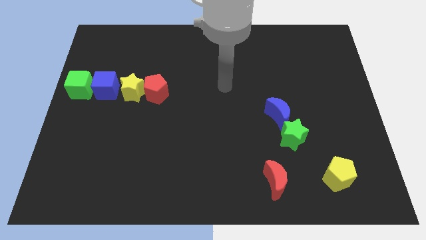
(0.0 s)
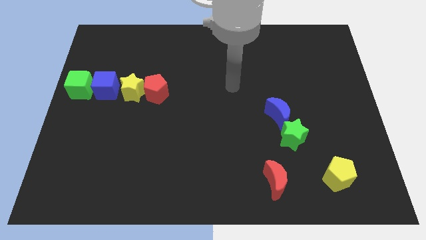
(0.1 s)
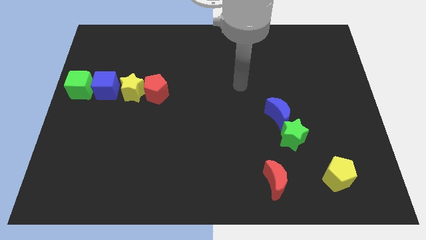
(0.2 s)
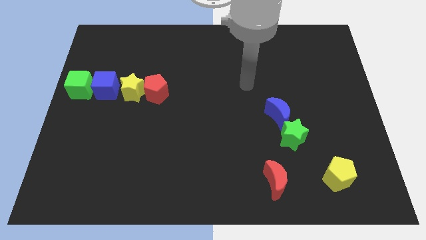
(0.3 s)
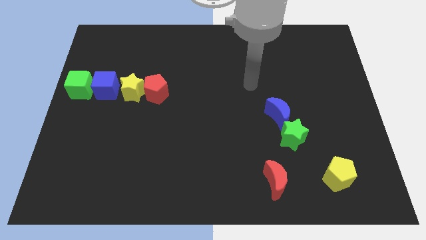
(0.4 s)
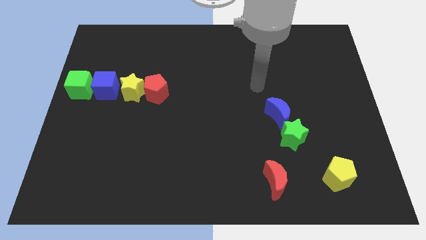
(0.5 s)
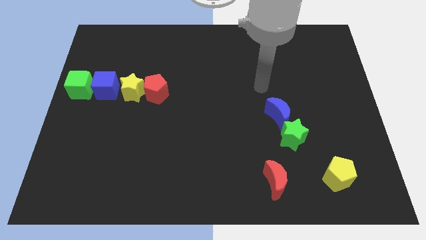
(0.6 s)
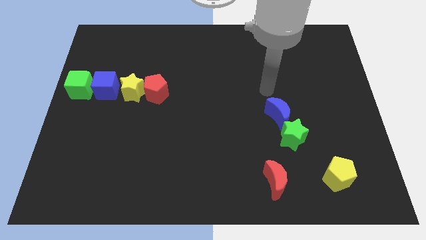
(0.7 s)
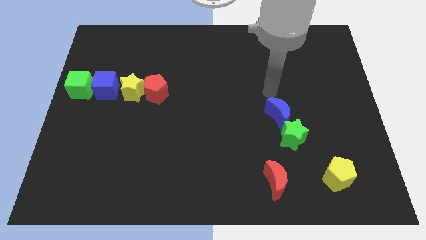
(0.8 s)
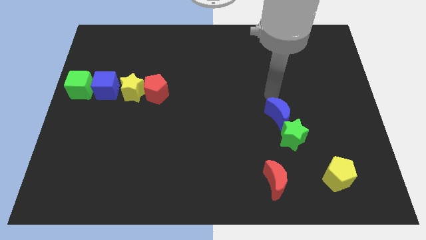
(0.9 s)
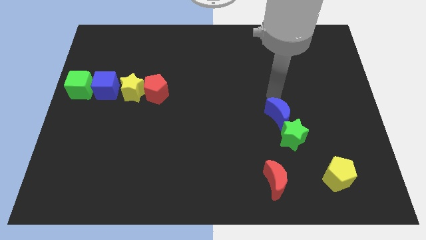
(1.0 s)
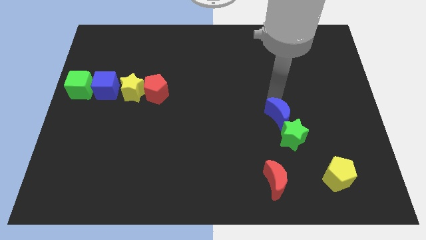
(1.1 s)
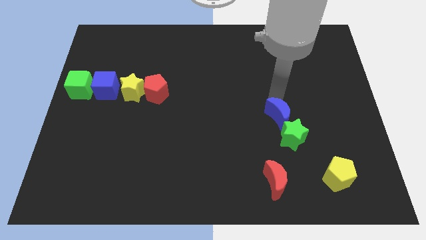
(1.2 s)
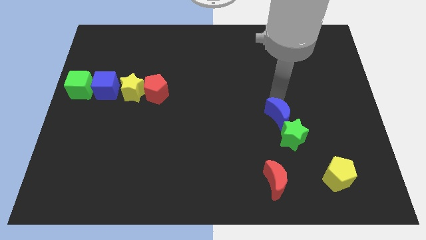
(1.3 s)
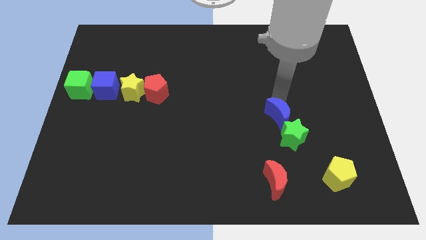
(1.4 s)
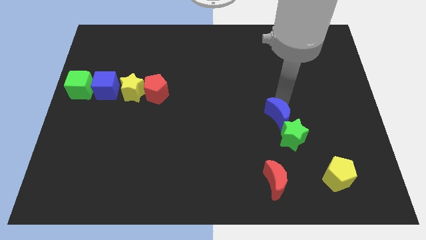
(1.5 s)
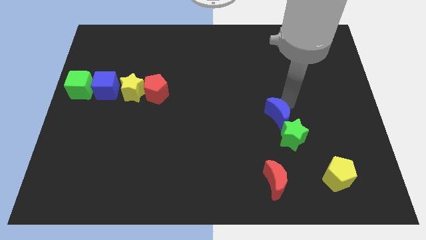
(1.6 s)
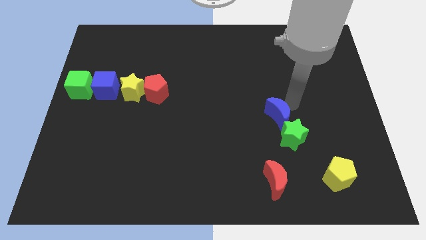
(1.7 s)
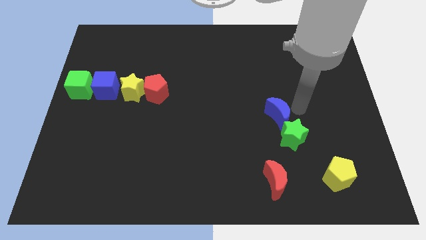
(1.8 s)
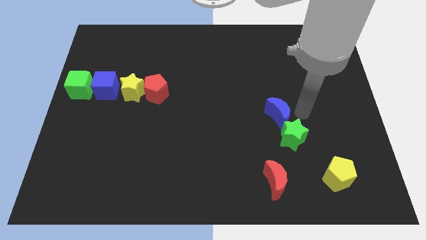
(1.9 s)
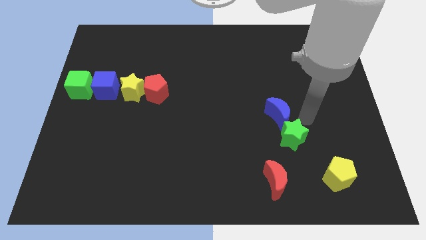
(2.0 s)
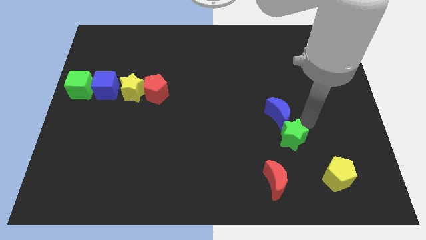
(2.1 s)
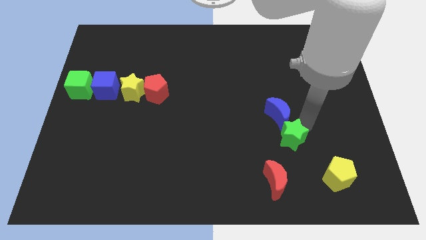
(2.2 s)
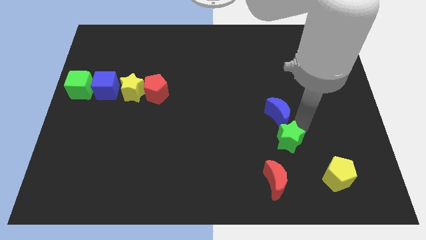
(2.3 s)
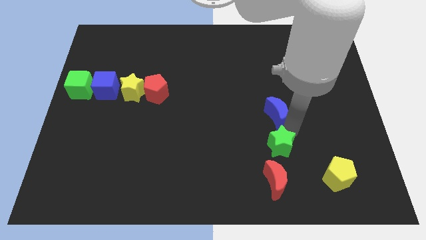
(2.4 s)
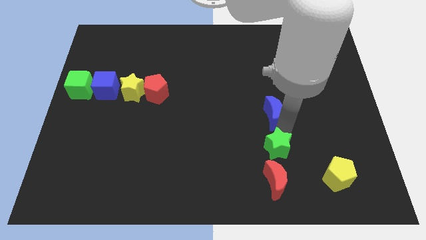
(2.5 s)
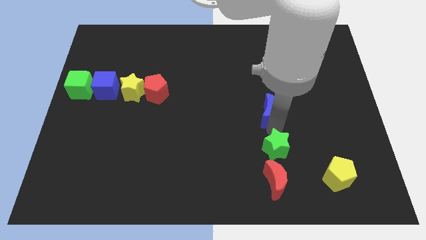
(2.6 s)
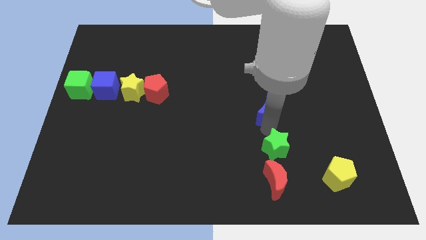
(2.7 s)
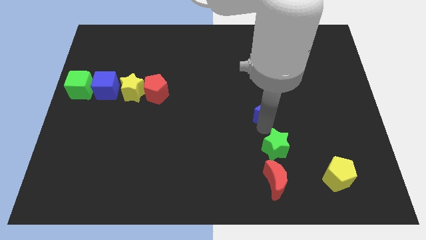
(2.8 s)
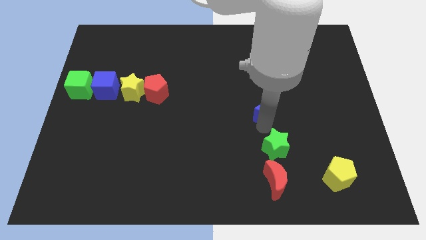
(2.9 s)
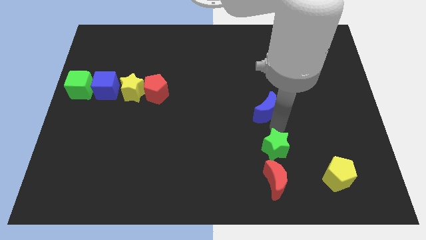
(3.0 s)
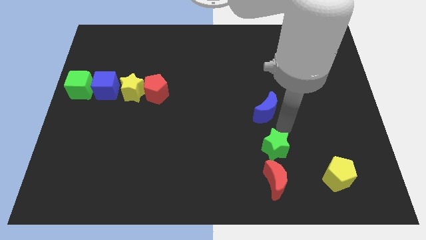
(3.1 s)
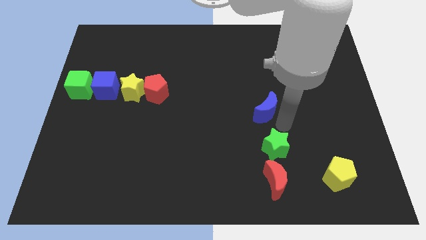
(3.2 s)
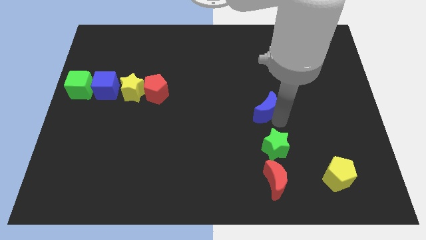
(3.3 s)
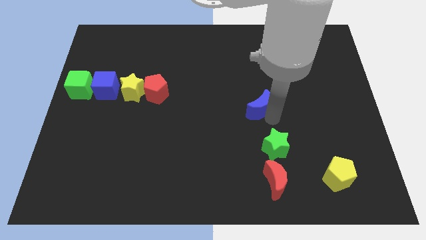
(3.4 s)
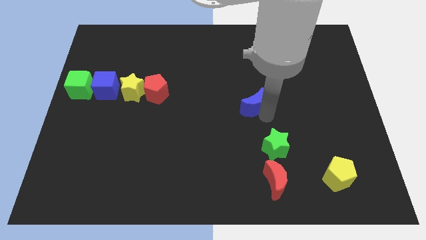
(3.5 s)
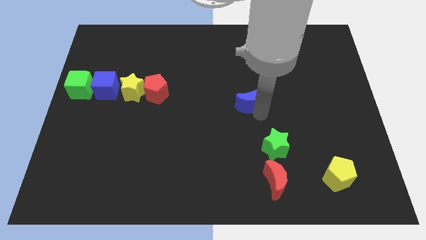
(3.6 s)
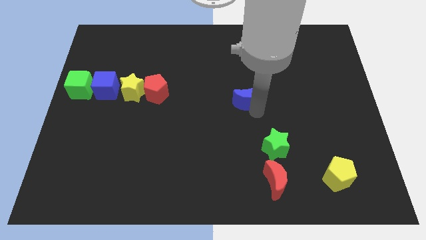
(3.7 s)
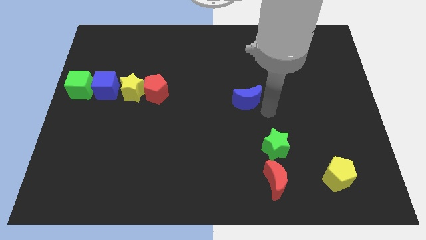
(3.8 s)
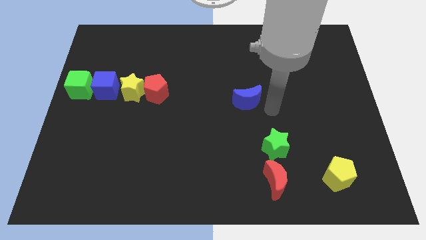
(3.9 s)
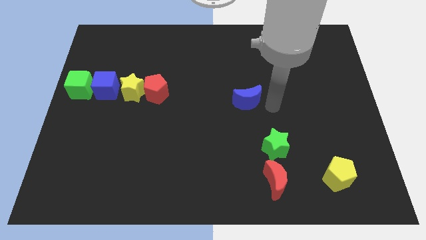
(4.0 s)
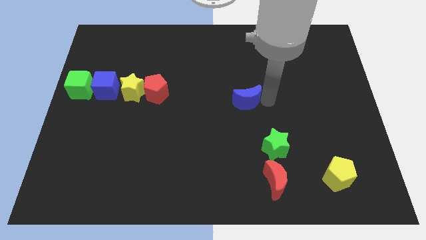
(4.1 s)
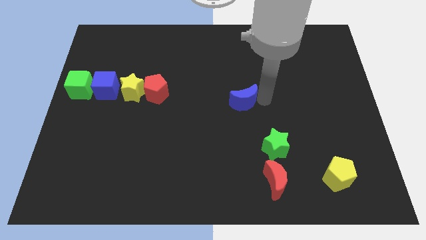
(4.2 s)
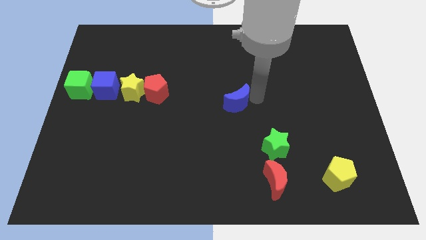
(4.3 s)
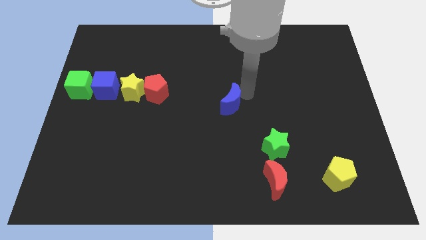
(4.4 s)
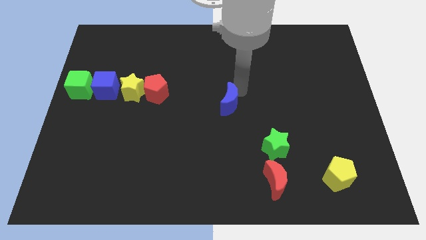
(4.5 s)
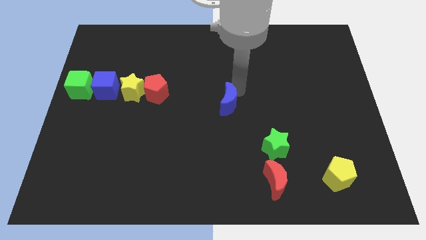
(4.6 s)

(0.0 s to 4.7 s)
move the blue crescent away from the green star

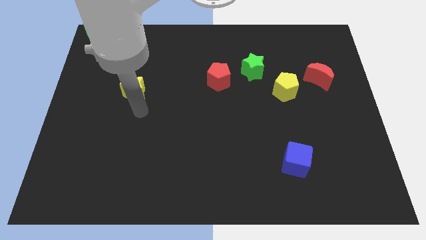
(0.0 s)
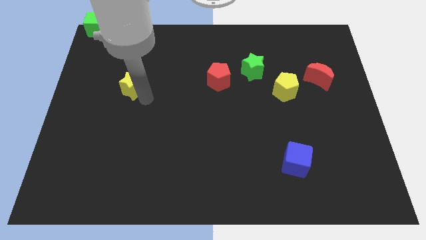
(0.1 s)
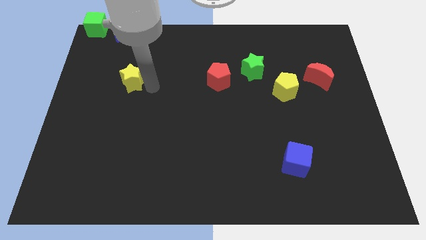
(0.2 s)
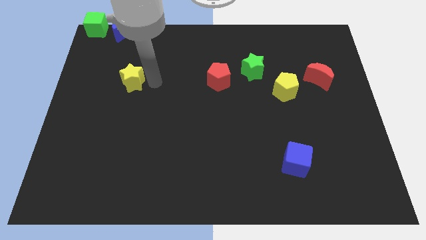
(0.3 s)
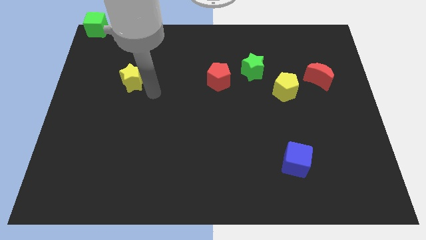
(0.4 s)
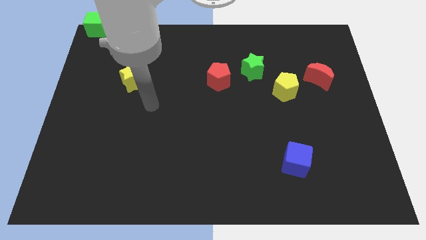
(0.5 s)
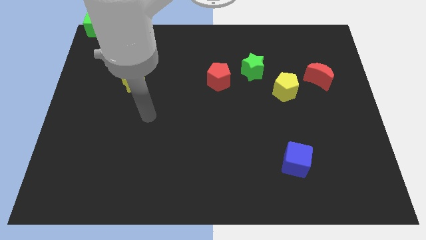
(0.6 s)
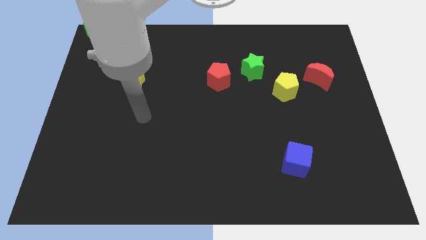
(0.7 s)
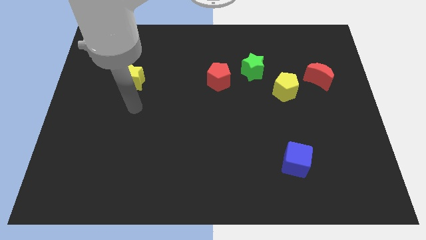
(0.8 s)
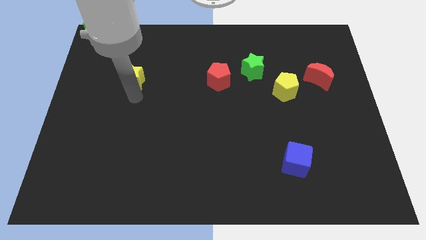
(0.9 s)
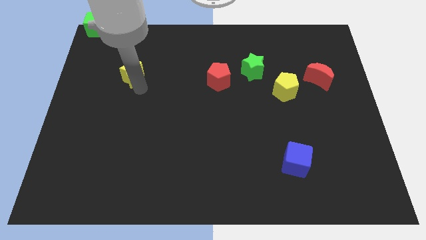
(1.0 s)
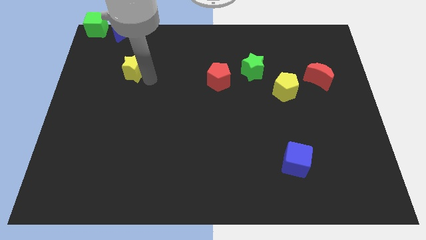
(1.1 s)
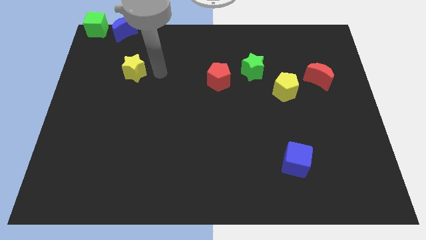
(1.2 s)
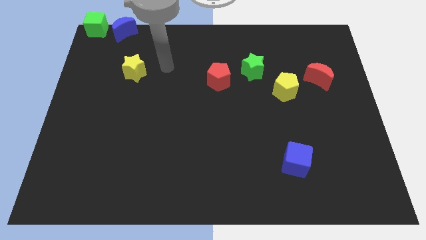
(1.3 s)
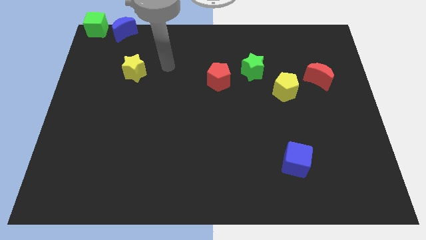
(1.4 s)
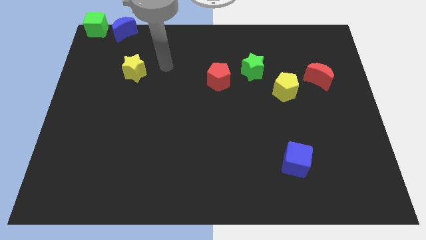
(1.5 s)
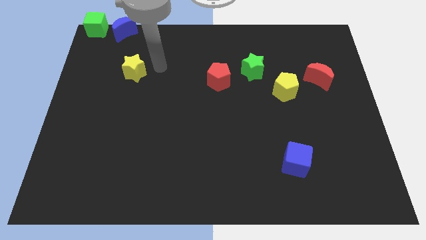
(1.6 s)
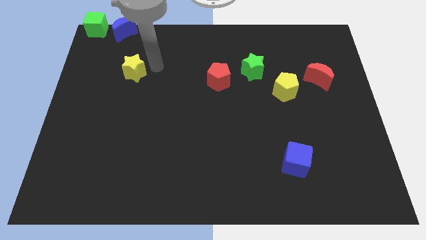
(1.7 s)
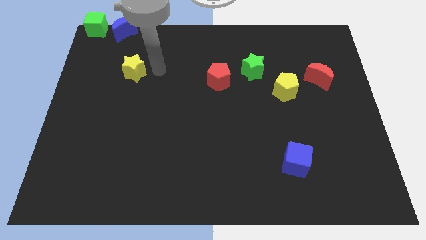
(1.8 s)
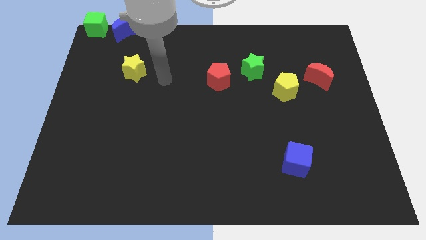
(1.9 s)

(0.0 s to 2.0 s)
move the yellow star parallel left to the red pentagon

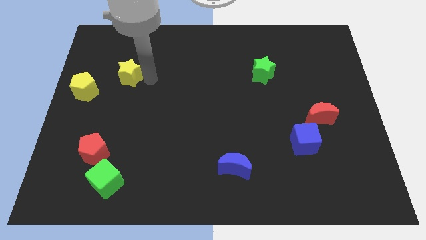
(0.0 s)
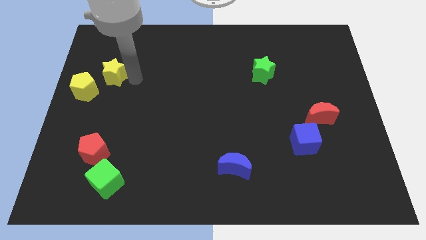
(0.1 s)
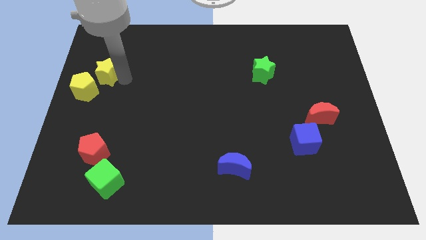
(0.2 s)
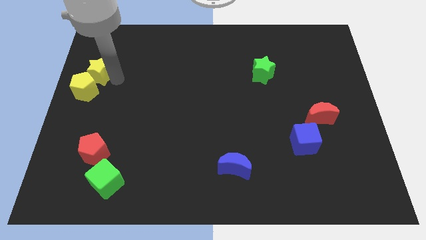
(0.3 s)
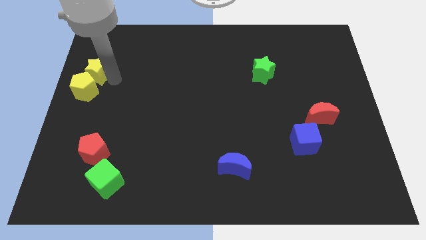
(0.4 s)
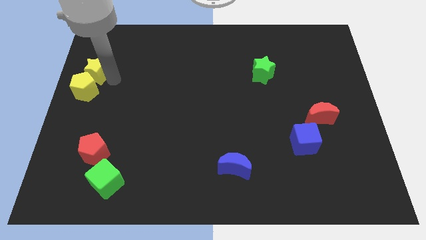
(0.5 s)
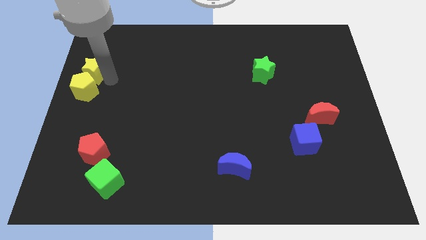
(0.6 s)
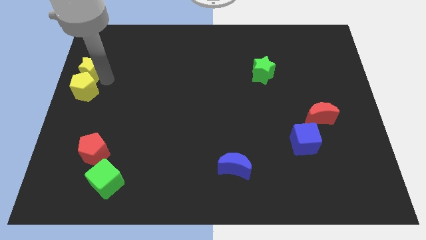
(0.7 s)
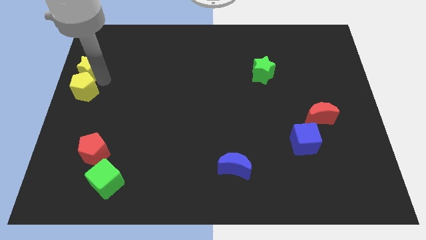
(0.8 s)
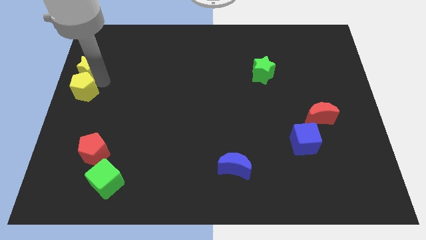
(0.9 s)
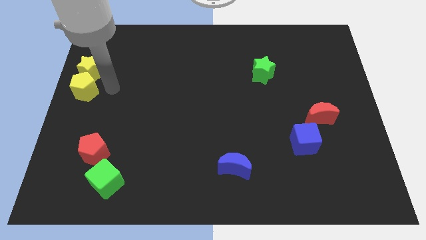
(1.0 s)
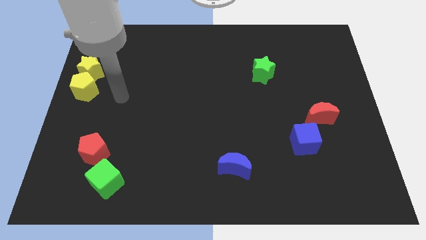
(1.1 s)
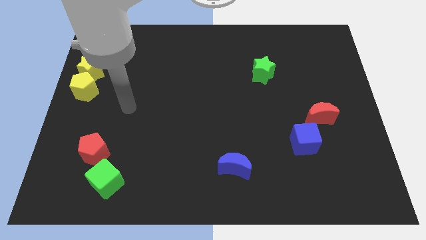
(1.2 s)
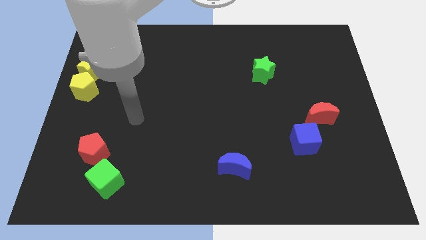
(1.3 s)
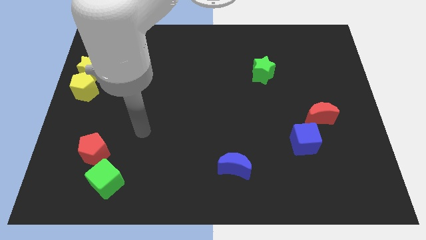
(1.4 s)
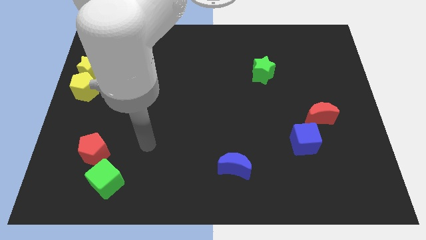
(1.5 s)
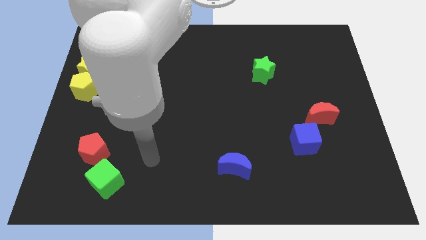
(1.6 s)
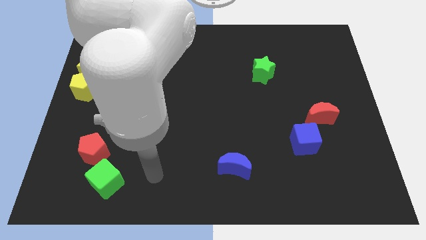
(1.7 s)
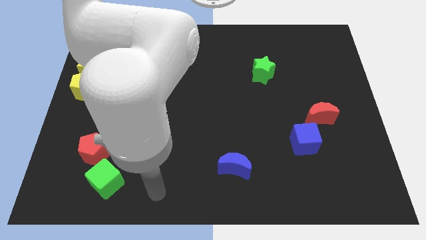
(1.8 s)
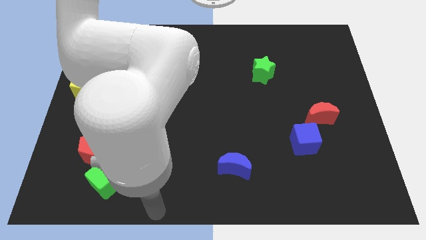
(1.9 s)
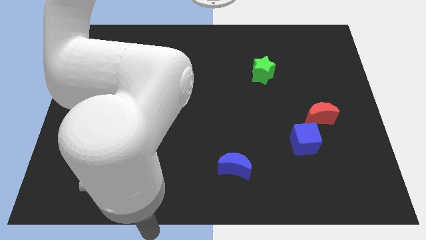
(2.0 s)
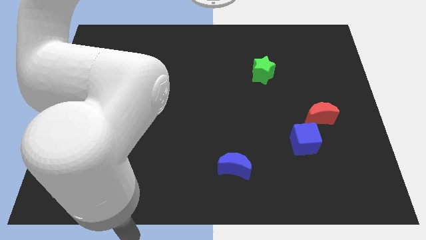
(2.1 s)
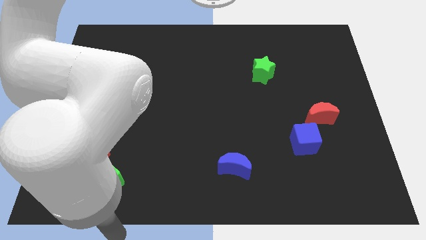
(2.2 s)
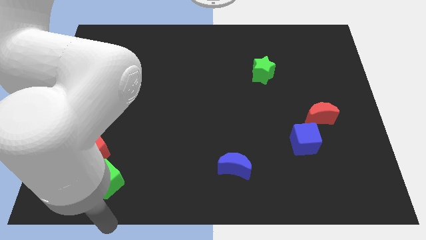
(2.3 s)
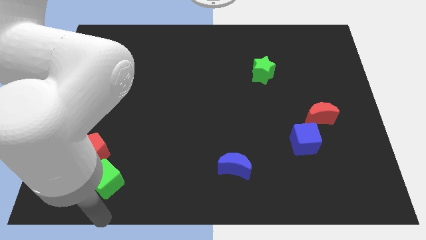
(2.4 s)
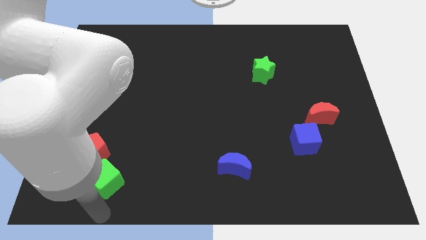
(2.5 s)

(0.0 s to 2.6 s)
place the yellow star above the yellow pentagon
